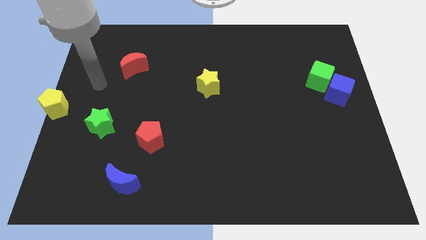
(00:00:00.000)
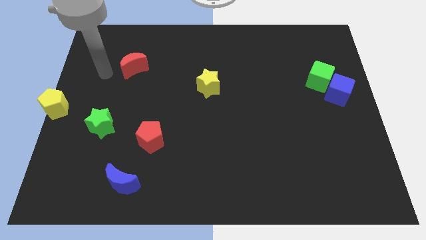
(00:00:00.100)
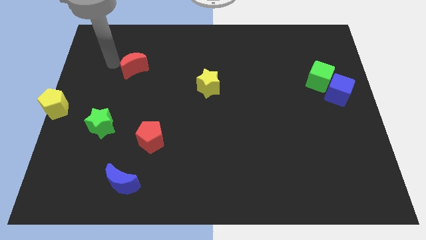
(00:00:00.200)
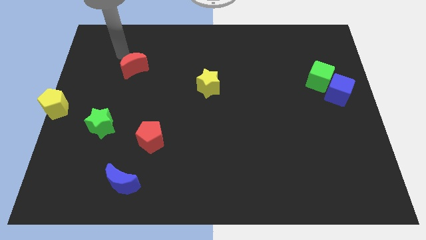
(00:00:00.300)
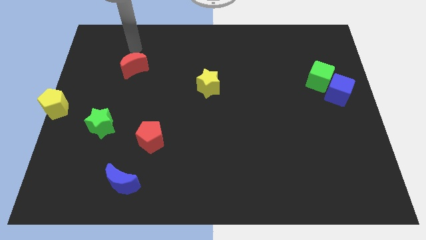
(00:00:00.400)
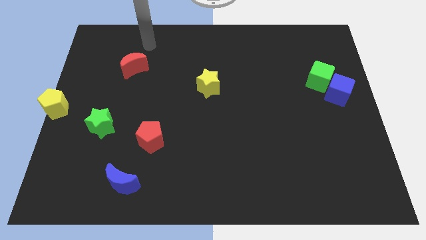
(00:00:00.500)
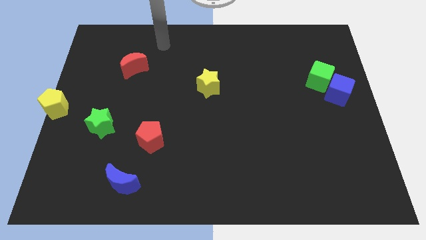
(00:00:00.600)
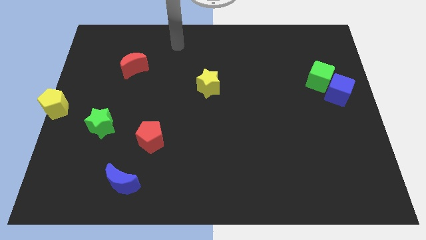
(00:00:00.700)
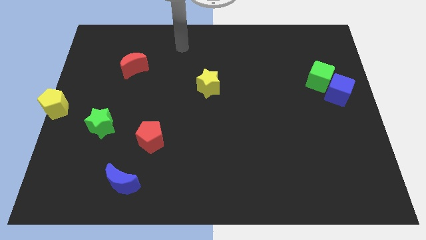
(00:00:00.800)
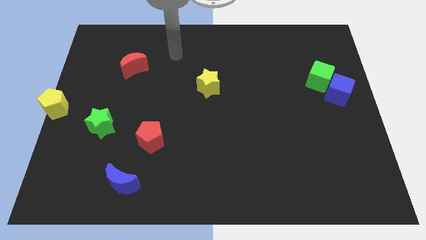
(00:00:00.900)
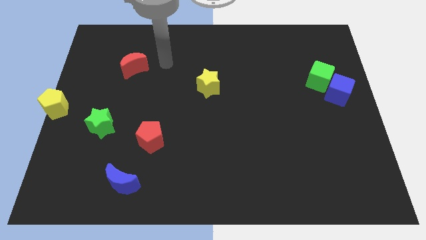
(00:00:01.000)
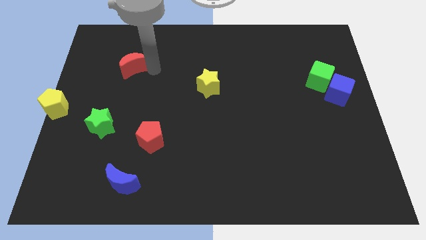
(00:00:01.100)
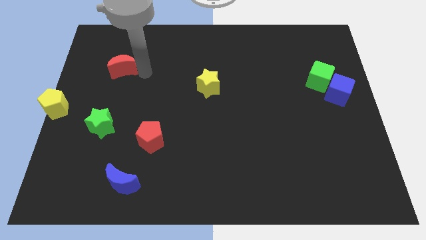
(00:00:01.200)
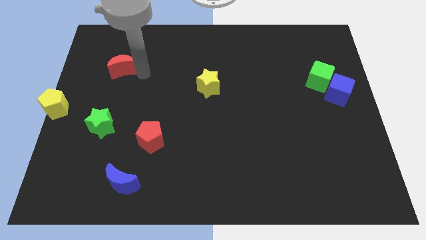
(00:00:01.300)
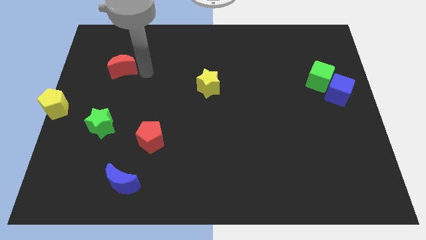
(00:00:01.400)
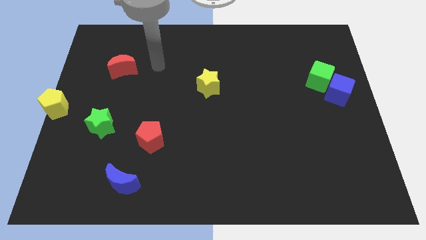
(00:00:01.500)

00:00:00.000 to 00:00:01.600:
move the arm around the red crescent

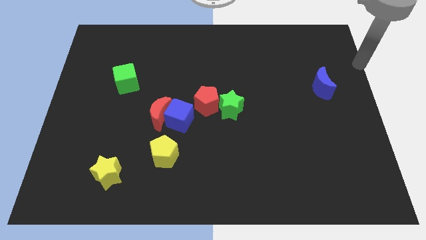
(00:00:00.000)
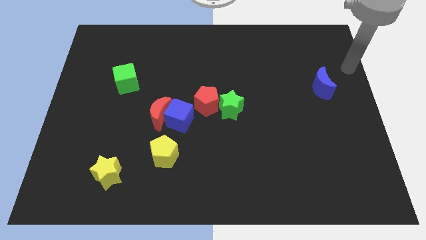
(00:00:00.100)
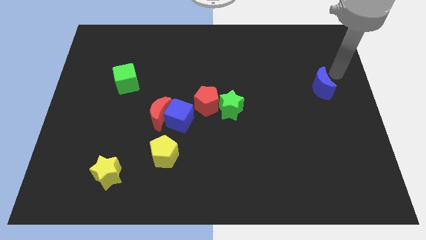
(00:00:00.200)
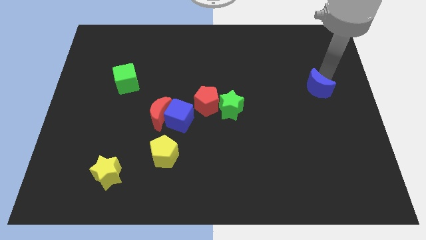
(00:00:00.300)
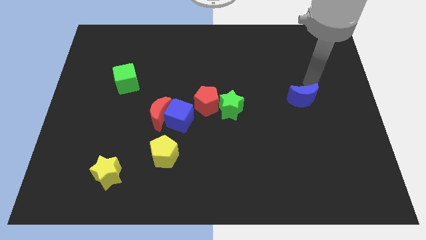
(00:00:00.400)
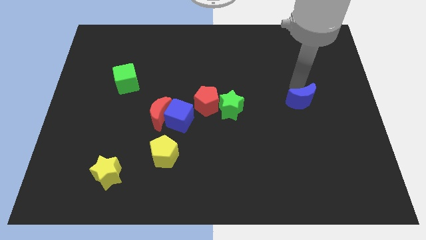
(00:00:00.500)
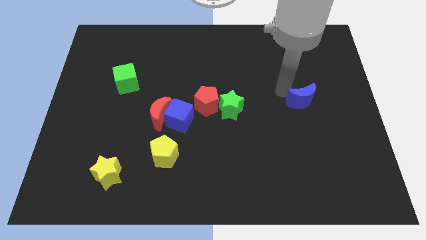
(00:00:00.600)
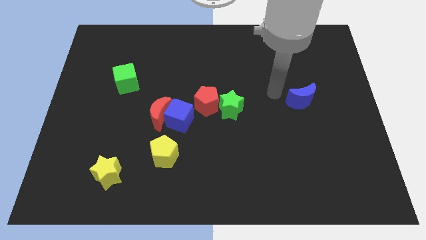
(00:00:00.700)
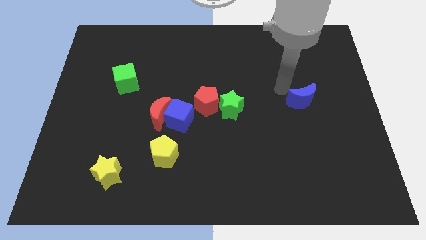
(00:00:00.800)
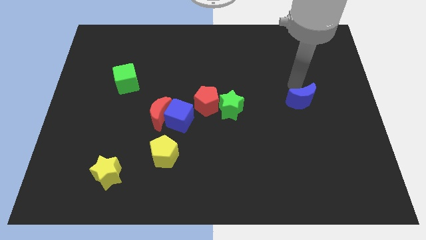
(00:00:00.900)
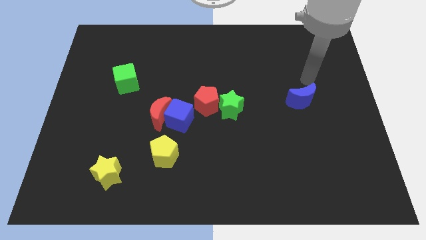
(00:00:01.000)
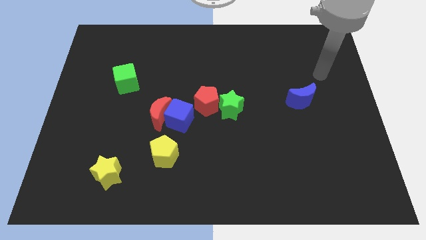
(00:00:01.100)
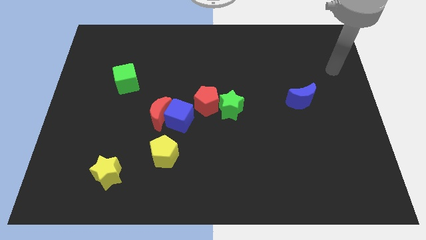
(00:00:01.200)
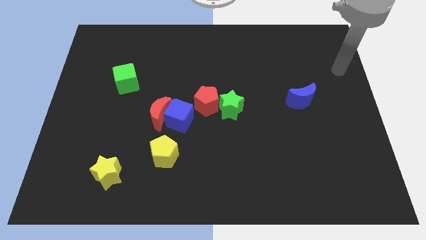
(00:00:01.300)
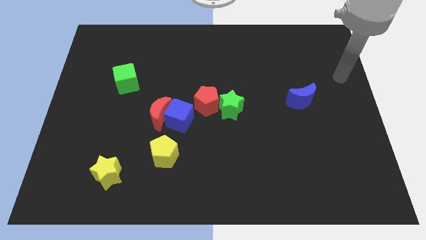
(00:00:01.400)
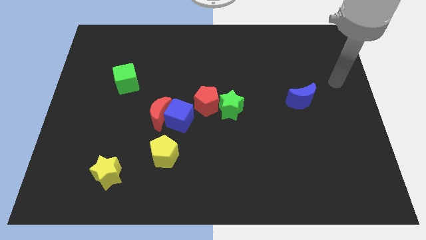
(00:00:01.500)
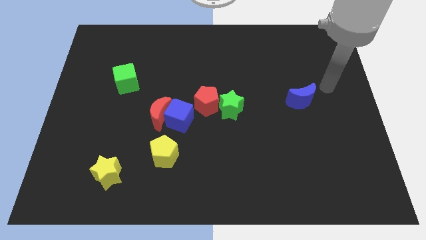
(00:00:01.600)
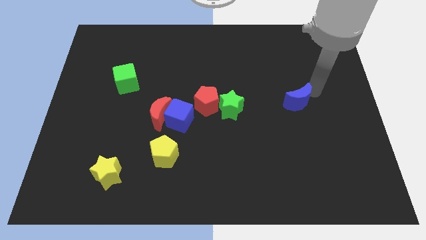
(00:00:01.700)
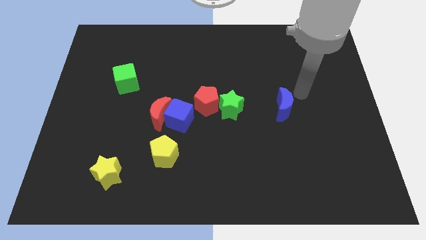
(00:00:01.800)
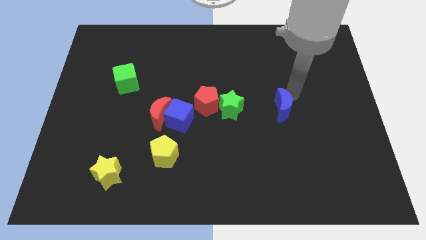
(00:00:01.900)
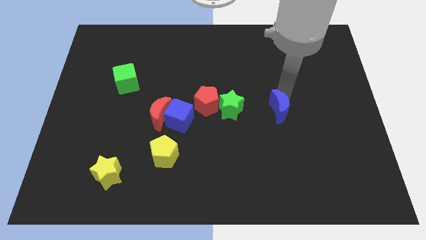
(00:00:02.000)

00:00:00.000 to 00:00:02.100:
place the blue moon right to the green star

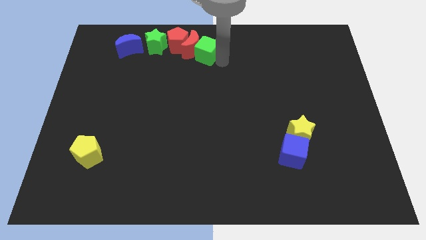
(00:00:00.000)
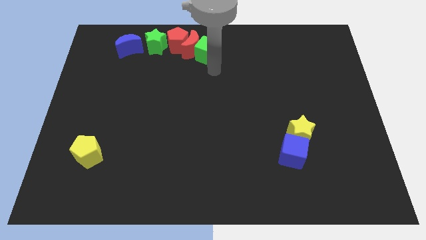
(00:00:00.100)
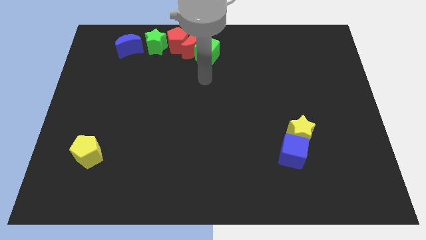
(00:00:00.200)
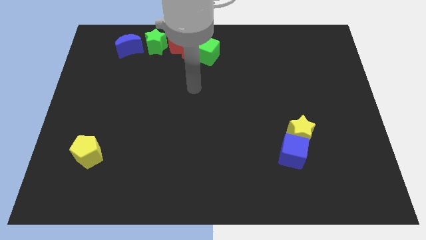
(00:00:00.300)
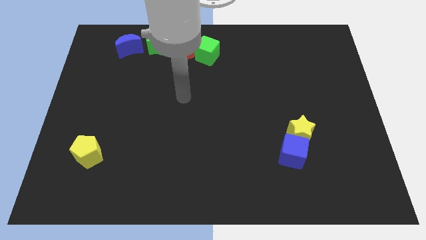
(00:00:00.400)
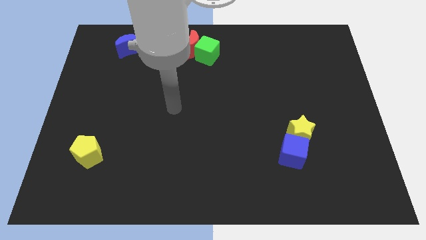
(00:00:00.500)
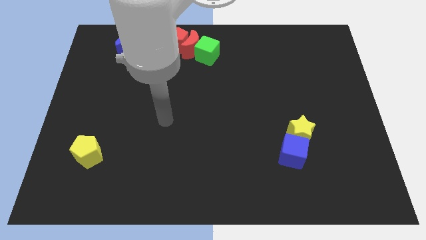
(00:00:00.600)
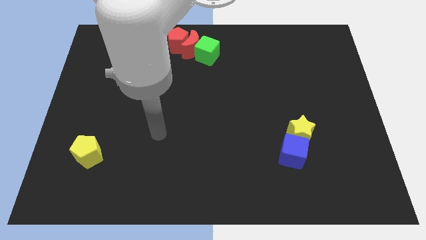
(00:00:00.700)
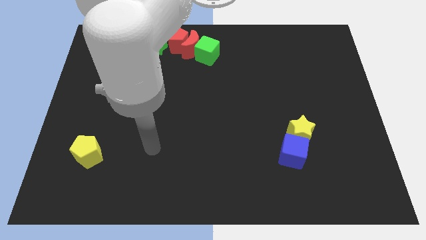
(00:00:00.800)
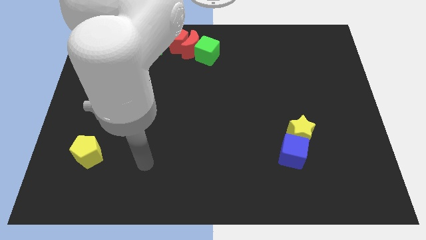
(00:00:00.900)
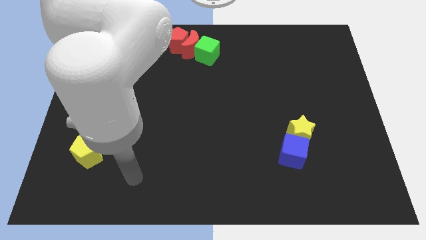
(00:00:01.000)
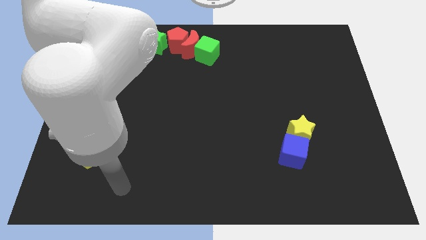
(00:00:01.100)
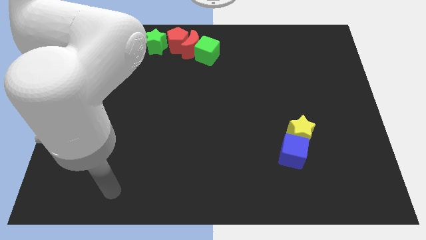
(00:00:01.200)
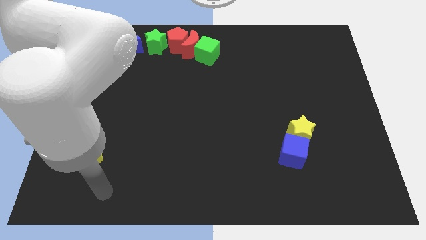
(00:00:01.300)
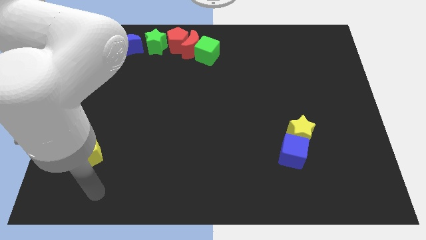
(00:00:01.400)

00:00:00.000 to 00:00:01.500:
move your arm away from the green cube

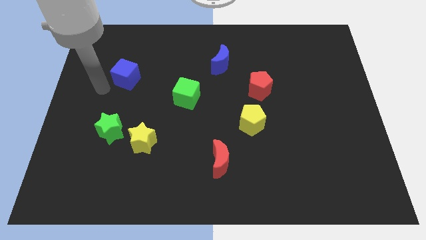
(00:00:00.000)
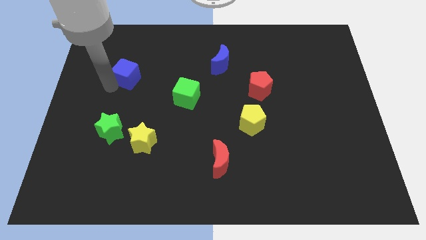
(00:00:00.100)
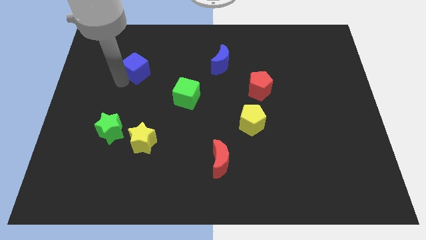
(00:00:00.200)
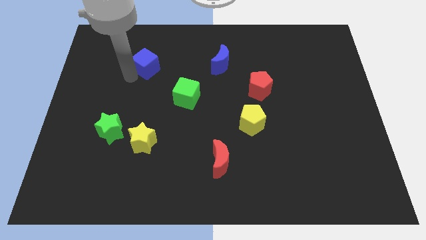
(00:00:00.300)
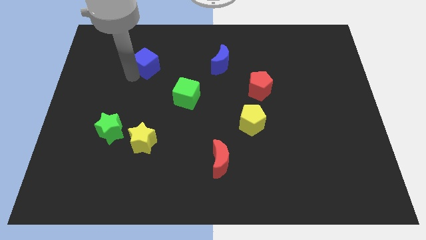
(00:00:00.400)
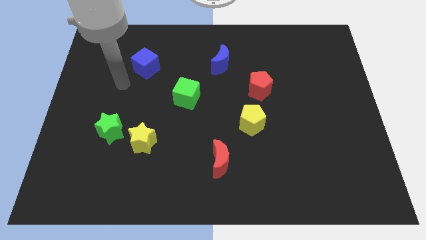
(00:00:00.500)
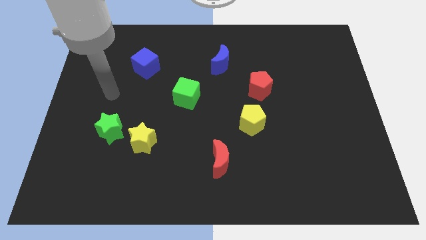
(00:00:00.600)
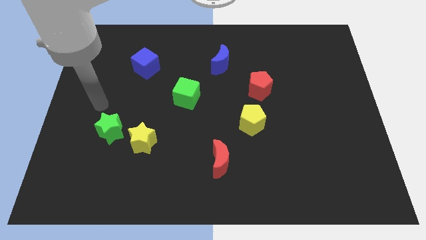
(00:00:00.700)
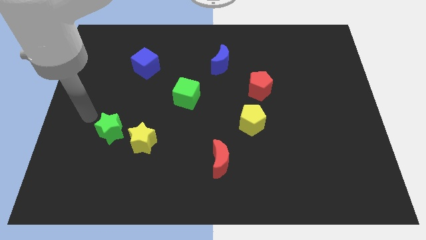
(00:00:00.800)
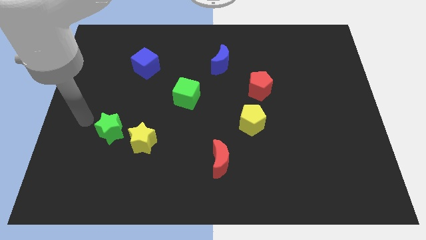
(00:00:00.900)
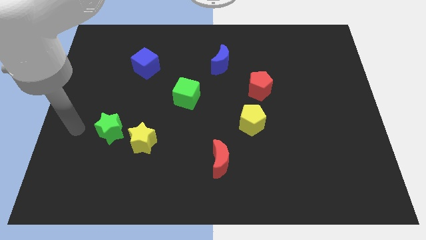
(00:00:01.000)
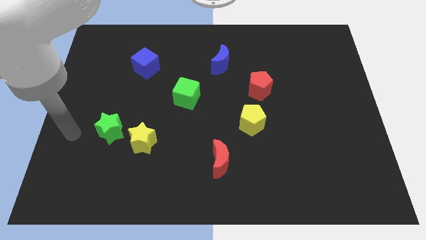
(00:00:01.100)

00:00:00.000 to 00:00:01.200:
move the blue cube to the left of the blue moon

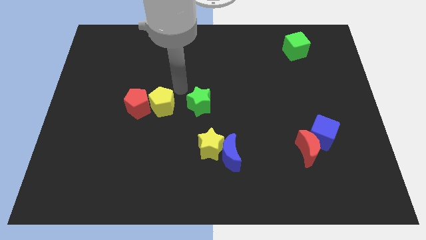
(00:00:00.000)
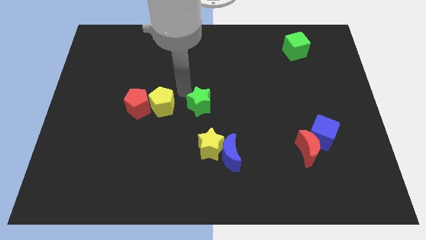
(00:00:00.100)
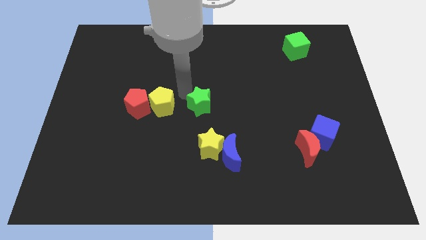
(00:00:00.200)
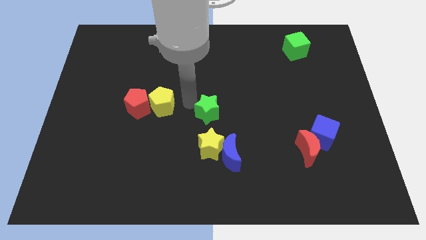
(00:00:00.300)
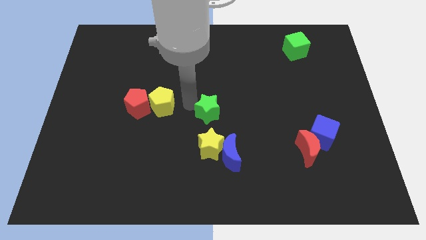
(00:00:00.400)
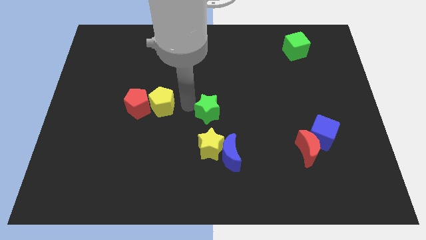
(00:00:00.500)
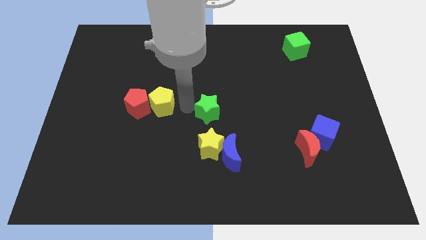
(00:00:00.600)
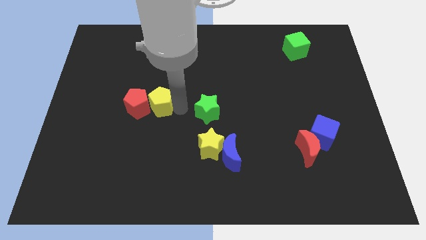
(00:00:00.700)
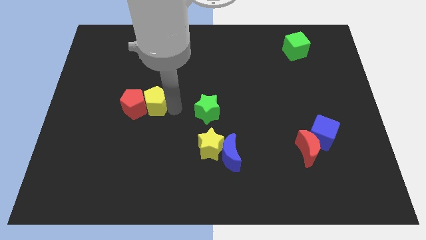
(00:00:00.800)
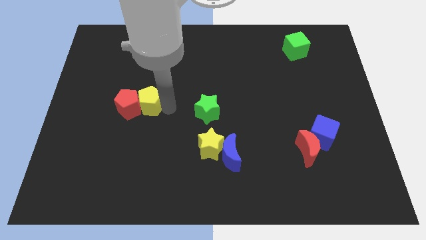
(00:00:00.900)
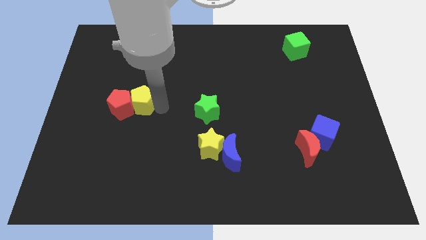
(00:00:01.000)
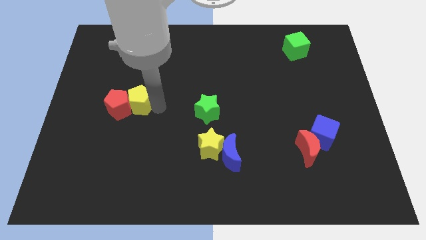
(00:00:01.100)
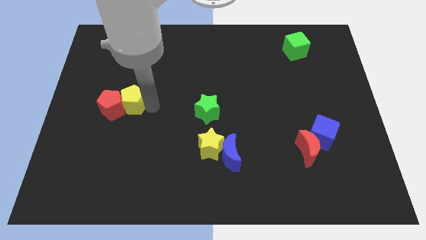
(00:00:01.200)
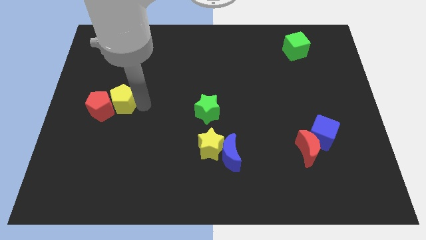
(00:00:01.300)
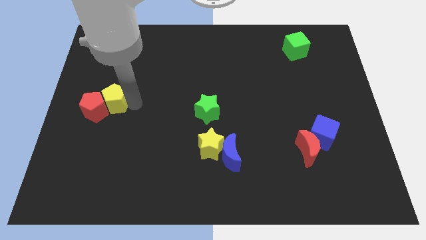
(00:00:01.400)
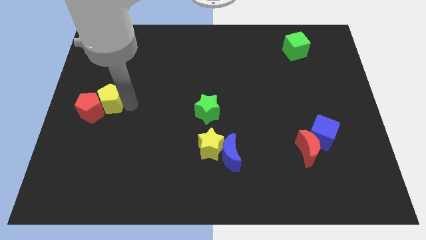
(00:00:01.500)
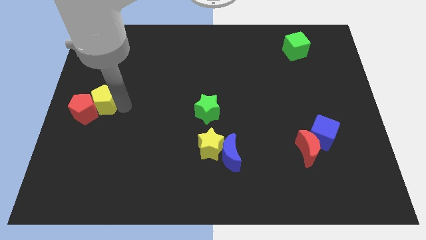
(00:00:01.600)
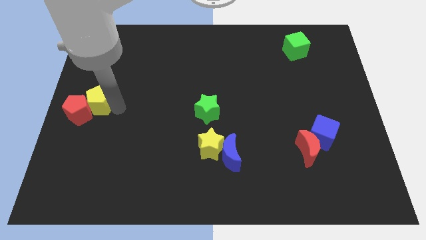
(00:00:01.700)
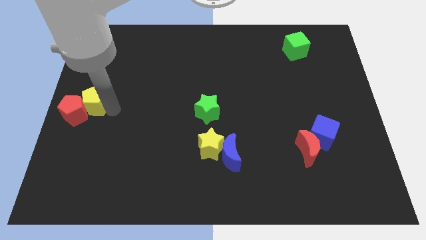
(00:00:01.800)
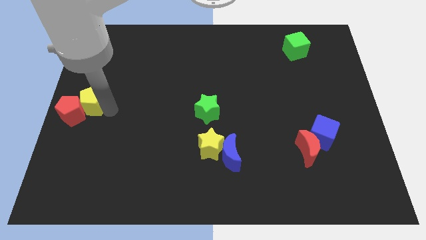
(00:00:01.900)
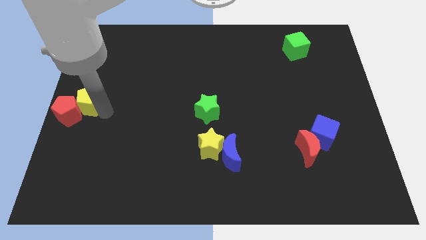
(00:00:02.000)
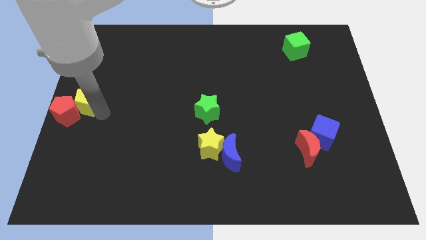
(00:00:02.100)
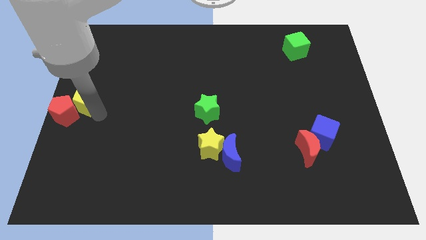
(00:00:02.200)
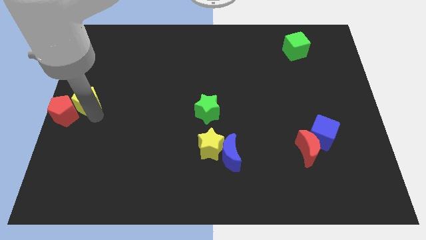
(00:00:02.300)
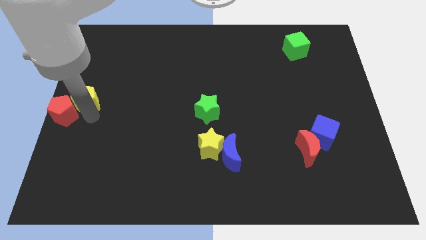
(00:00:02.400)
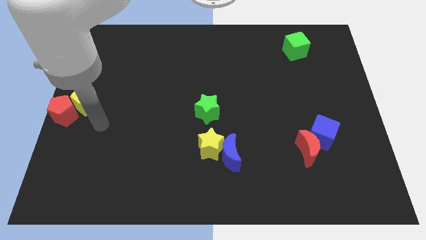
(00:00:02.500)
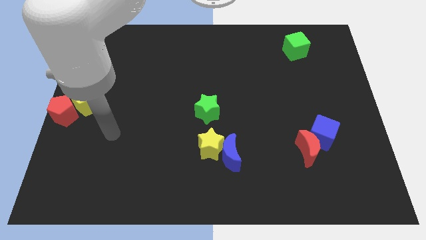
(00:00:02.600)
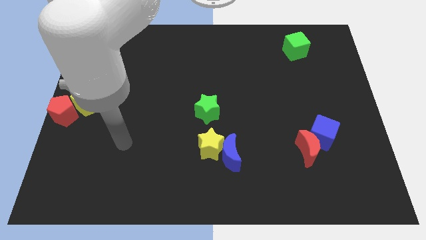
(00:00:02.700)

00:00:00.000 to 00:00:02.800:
seperate the yellow pentagon and red pentagon from the left side of the green star
